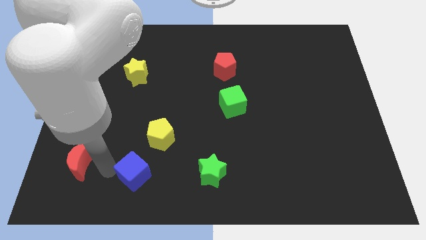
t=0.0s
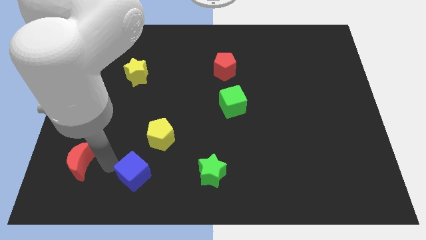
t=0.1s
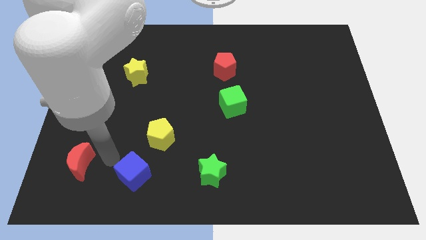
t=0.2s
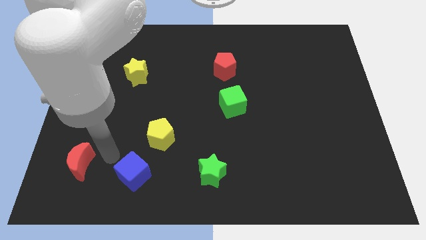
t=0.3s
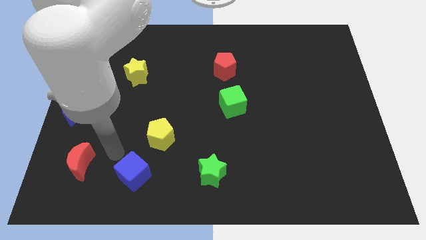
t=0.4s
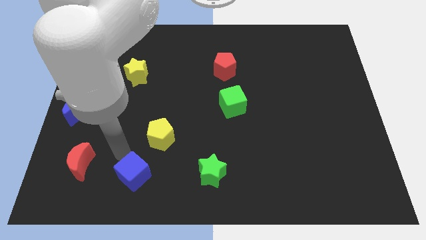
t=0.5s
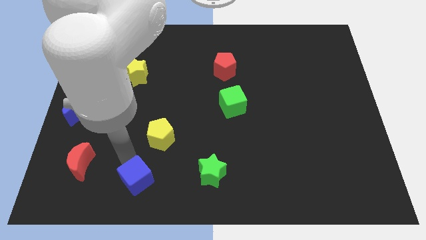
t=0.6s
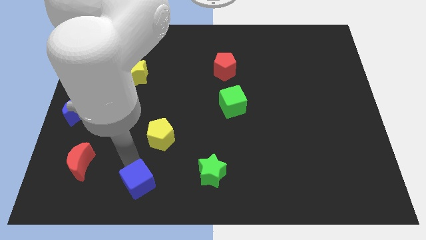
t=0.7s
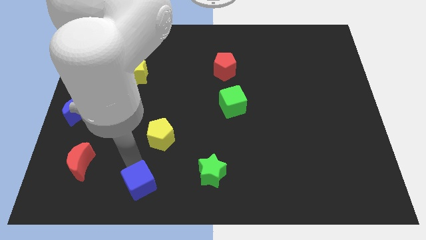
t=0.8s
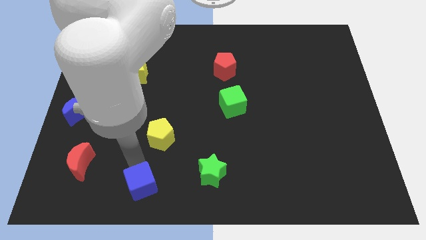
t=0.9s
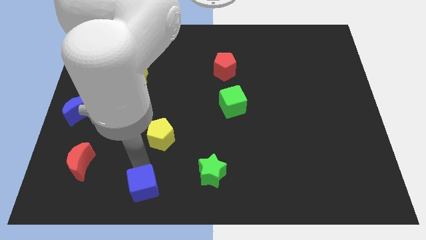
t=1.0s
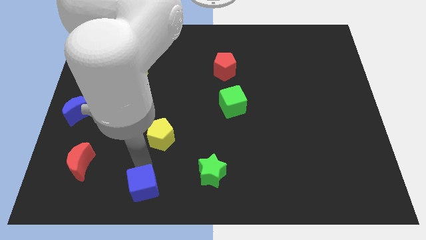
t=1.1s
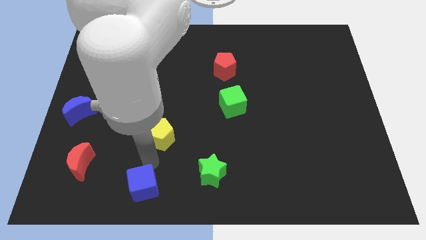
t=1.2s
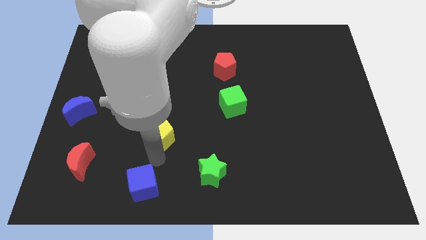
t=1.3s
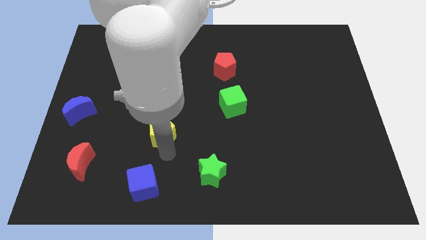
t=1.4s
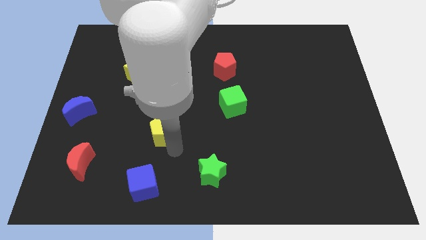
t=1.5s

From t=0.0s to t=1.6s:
push the blue cube slightly to the bottom

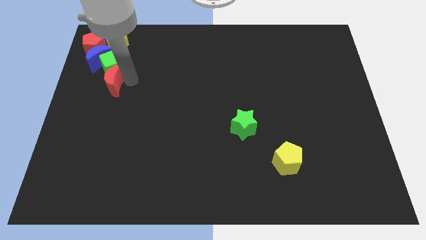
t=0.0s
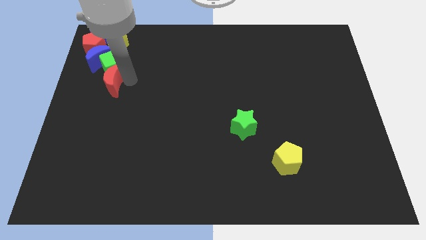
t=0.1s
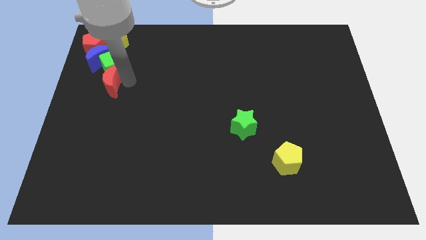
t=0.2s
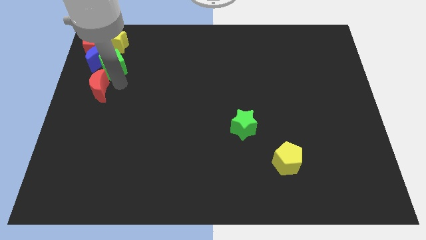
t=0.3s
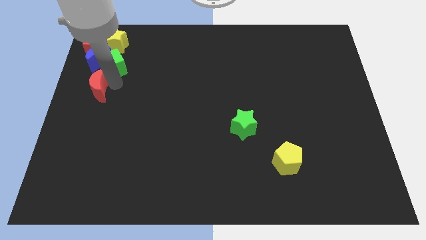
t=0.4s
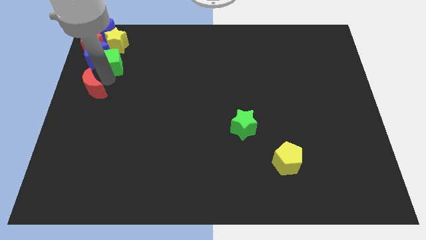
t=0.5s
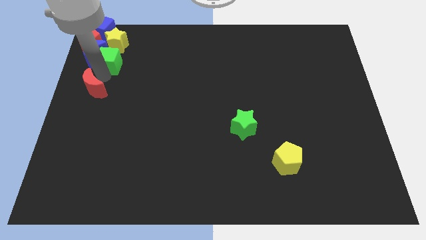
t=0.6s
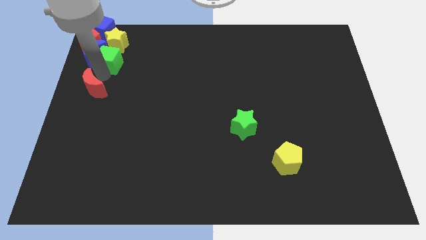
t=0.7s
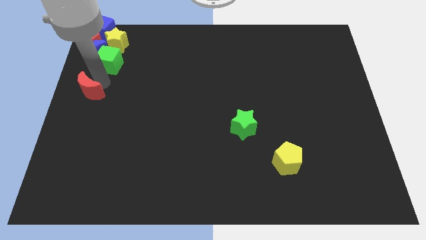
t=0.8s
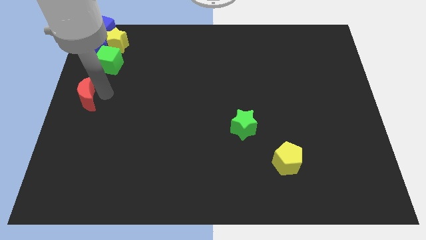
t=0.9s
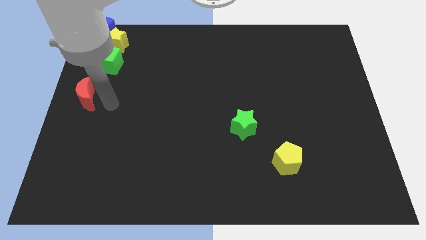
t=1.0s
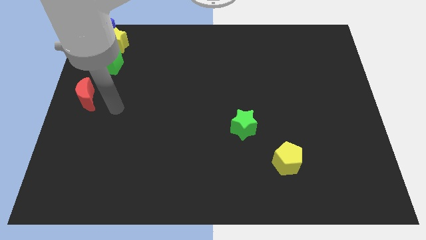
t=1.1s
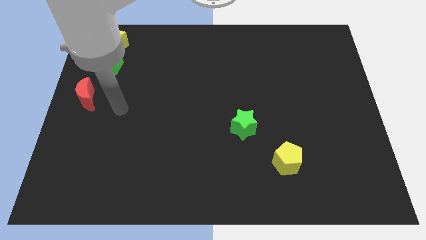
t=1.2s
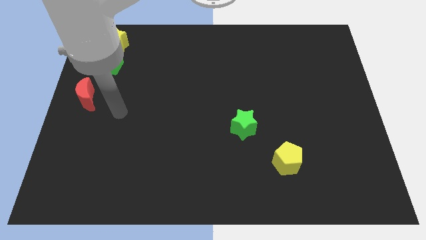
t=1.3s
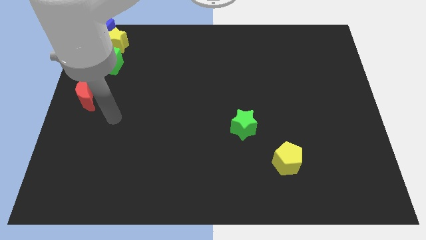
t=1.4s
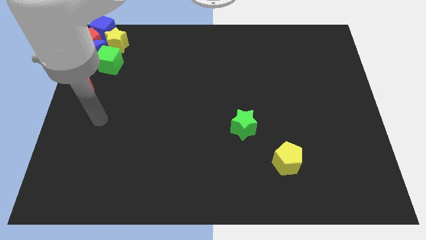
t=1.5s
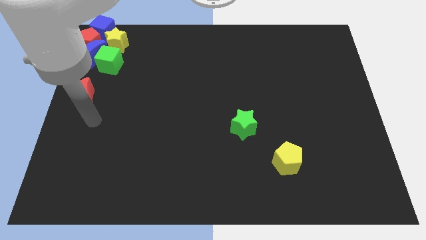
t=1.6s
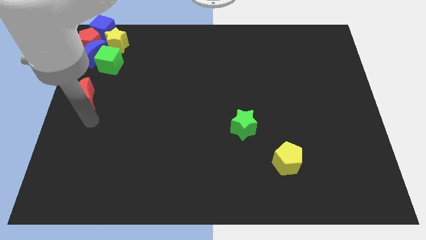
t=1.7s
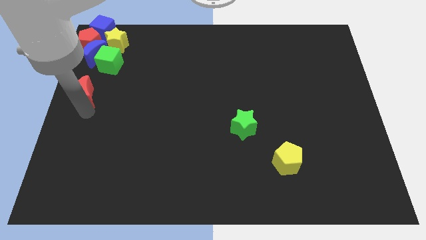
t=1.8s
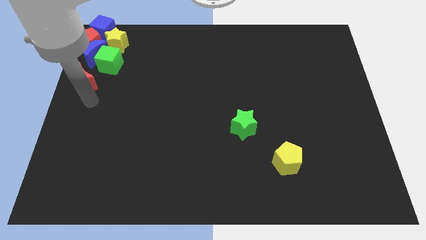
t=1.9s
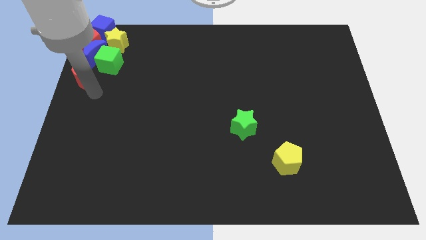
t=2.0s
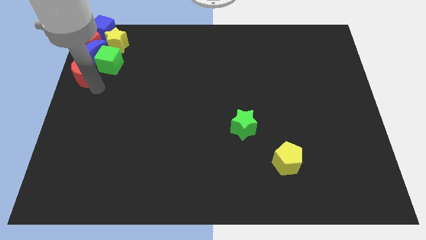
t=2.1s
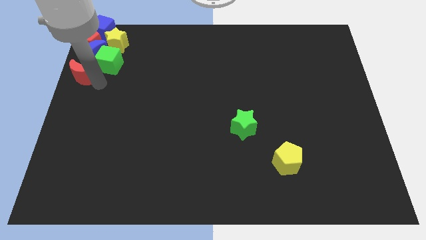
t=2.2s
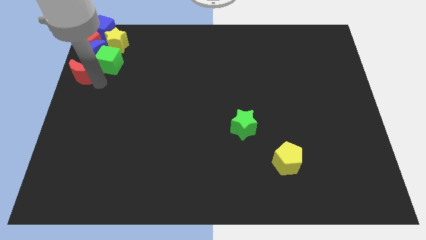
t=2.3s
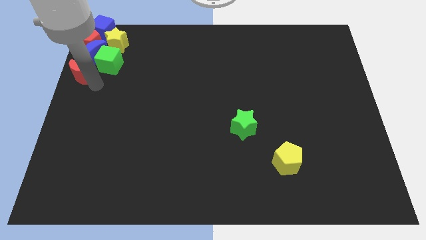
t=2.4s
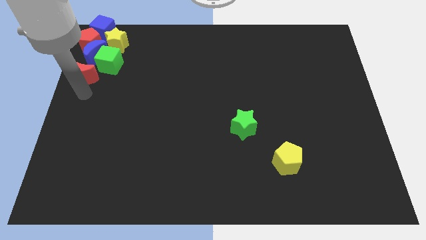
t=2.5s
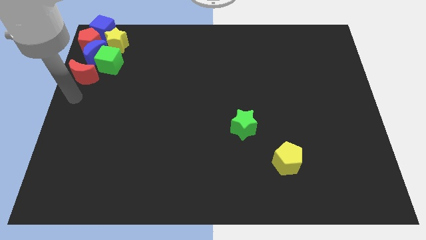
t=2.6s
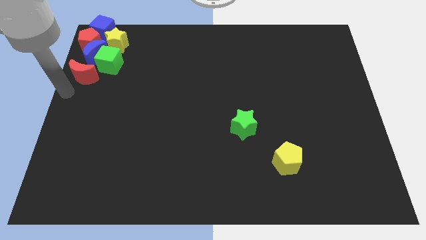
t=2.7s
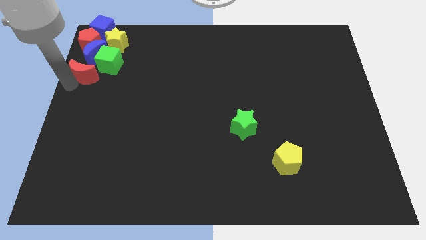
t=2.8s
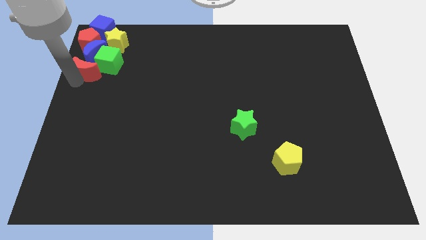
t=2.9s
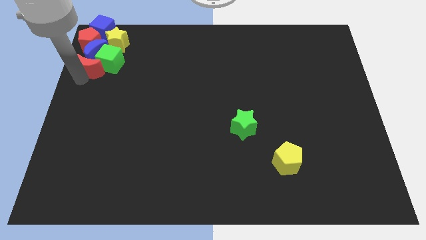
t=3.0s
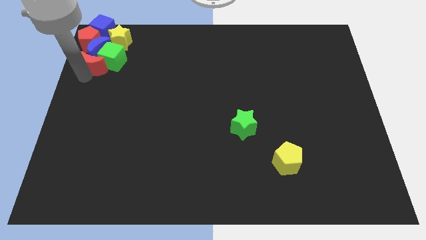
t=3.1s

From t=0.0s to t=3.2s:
slide the red moon at the bottom side of the blue crescent

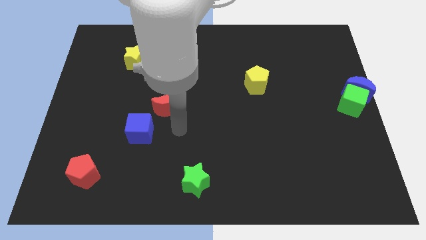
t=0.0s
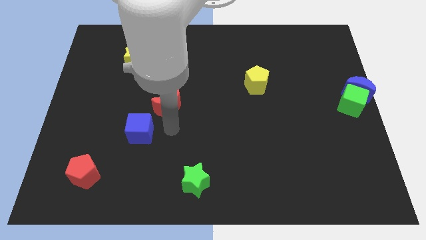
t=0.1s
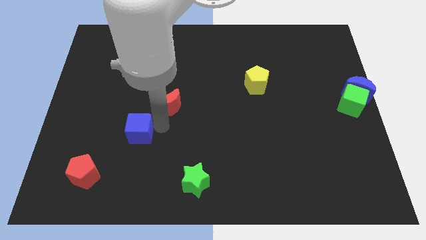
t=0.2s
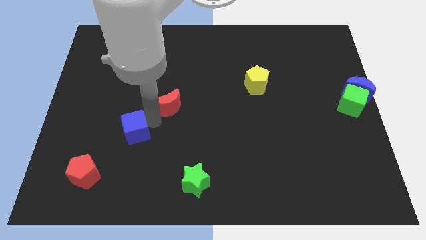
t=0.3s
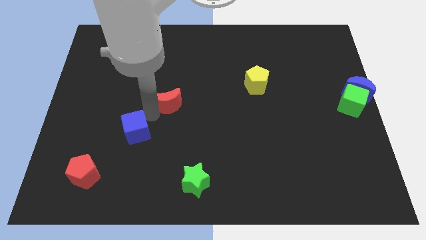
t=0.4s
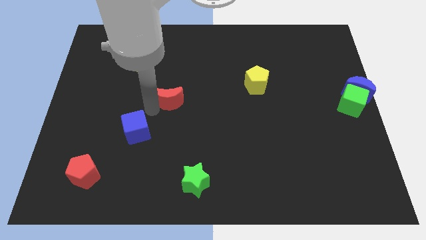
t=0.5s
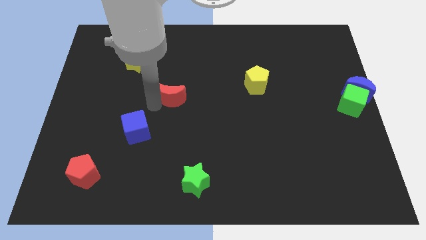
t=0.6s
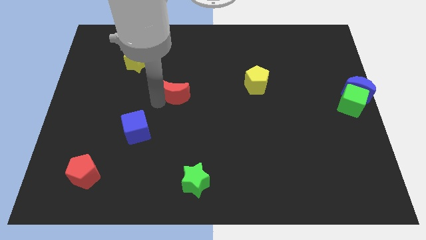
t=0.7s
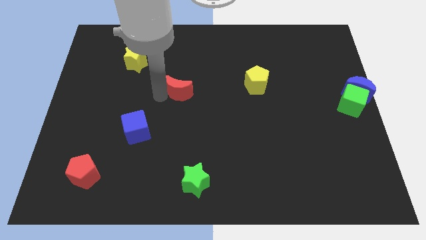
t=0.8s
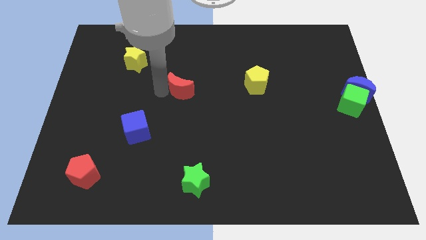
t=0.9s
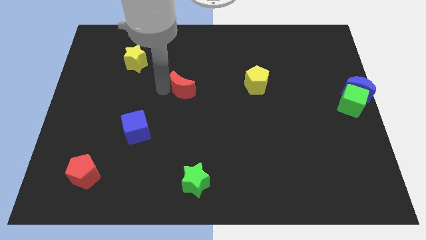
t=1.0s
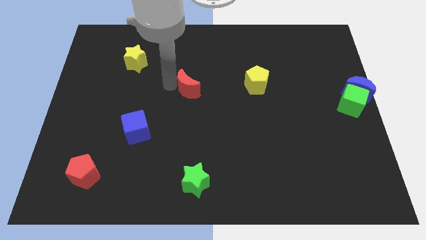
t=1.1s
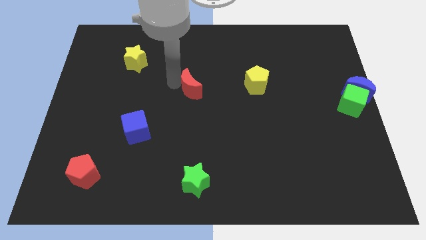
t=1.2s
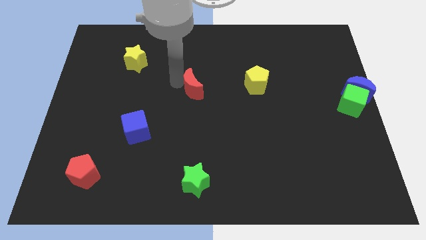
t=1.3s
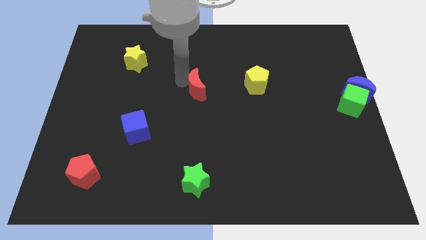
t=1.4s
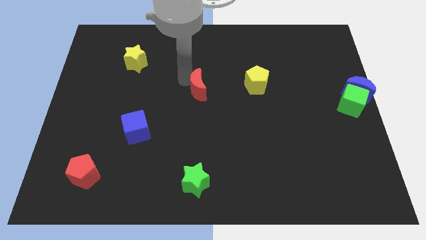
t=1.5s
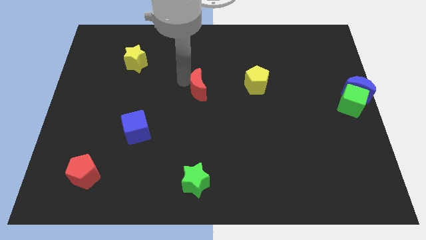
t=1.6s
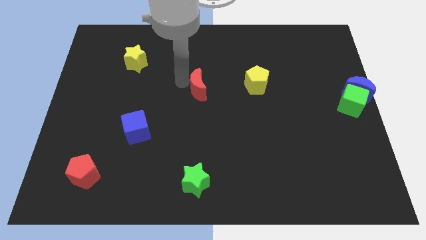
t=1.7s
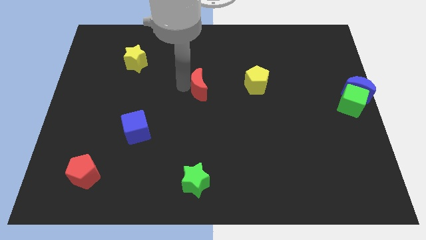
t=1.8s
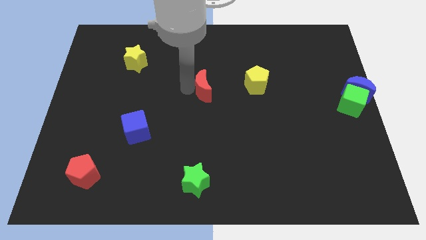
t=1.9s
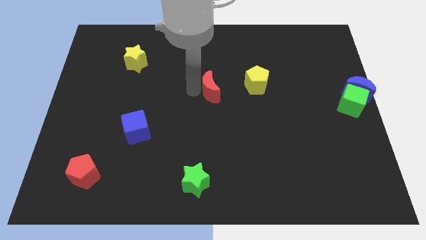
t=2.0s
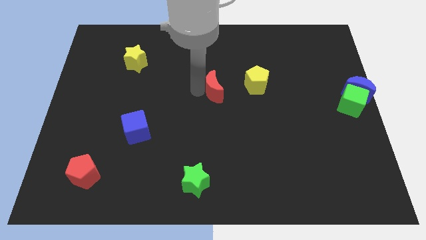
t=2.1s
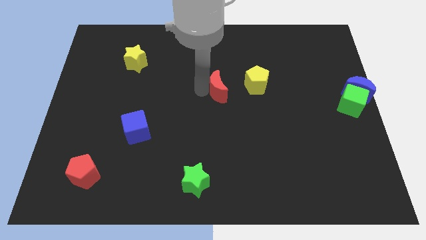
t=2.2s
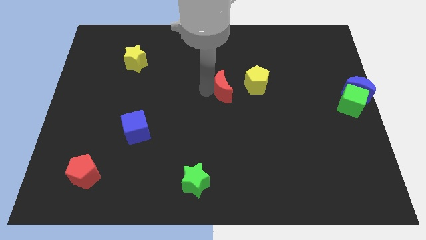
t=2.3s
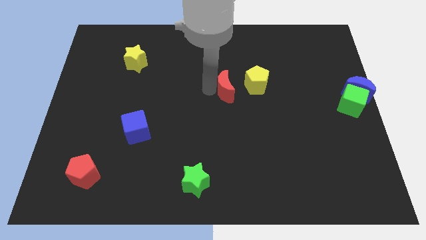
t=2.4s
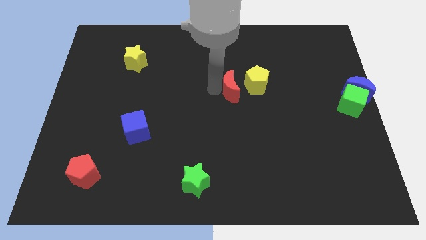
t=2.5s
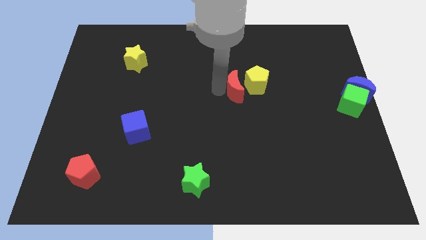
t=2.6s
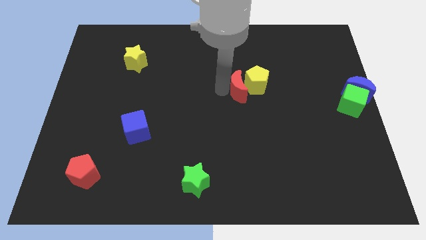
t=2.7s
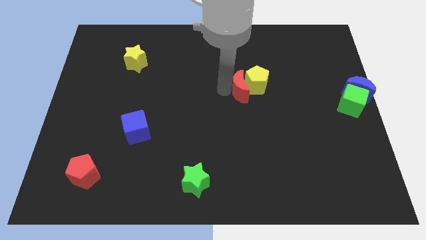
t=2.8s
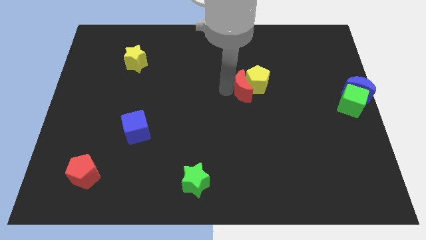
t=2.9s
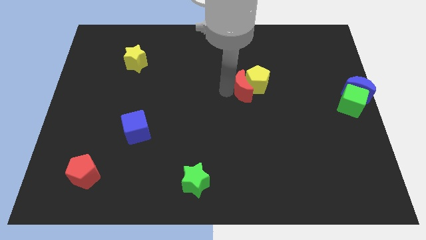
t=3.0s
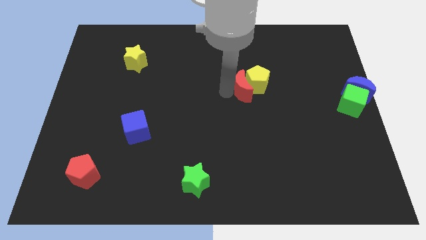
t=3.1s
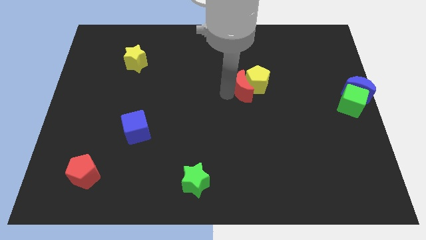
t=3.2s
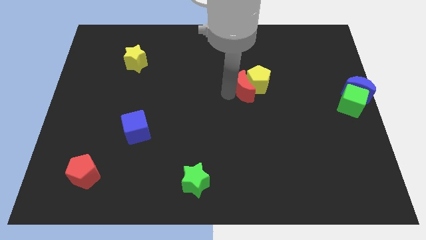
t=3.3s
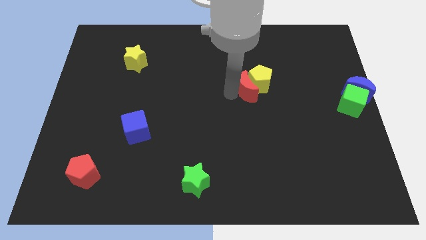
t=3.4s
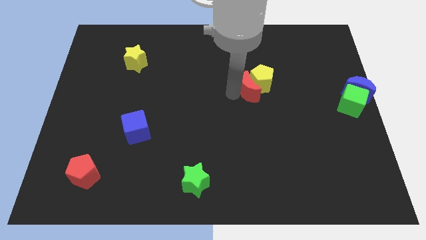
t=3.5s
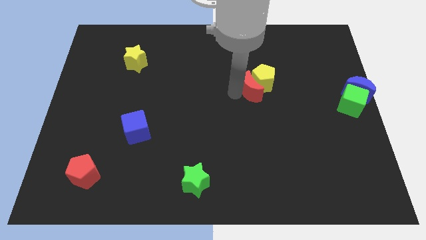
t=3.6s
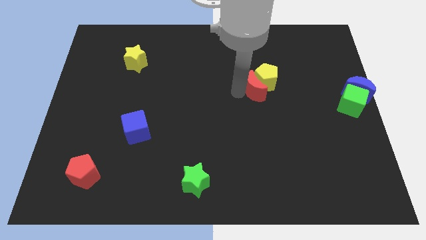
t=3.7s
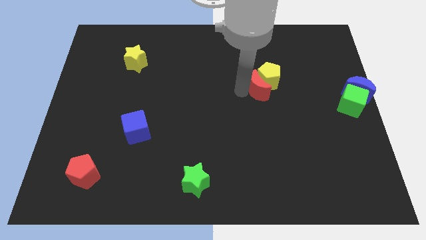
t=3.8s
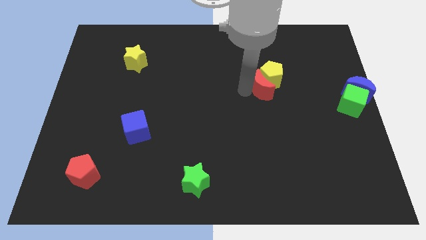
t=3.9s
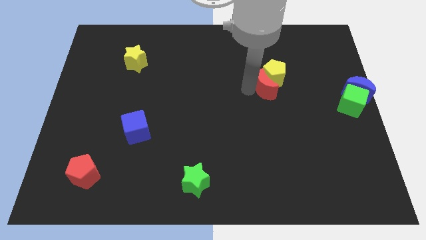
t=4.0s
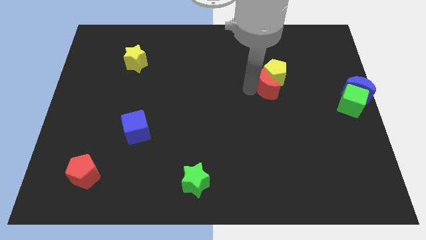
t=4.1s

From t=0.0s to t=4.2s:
push the red crescent to the left of green cube along with the yellow pentagon
